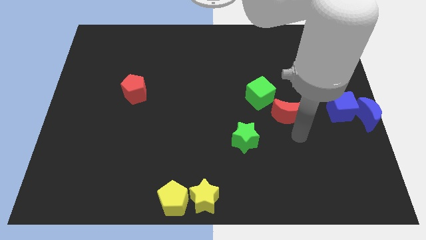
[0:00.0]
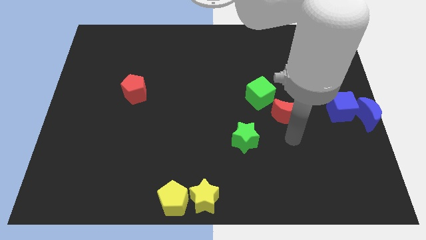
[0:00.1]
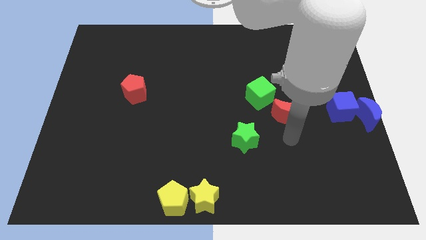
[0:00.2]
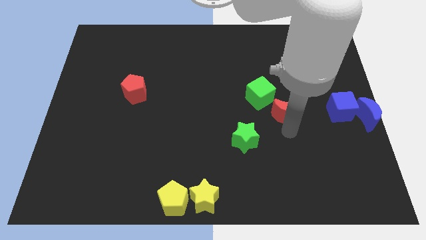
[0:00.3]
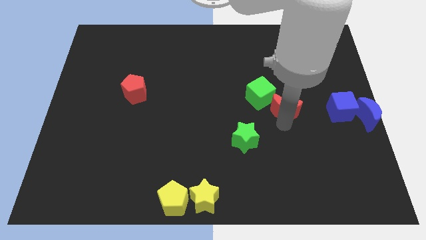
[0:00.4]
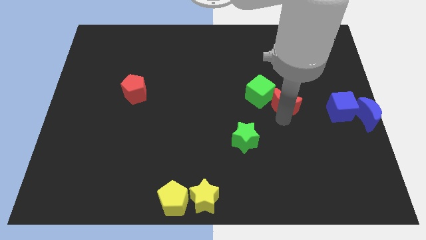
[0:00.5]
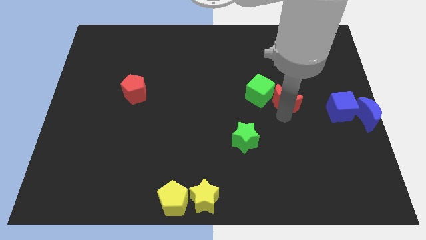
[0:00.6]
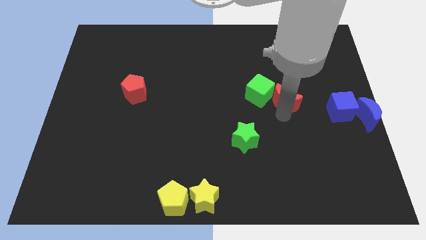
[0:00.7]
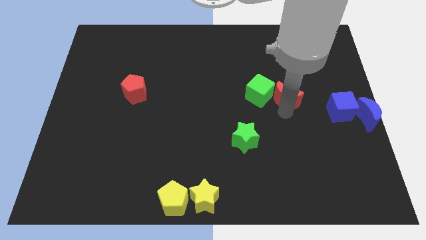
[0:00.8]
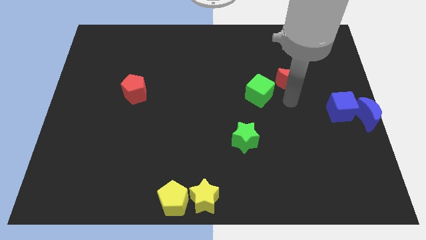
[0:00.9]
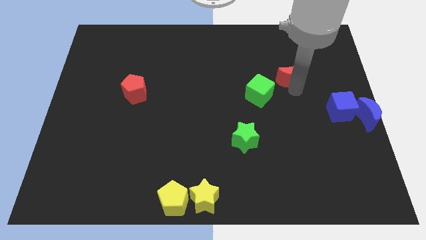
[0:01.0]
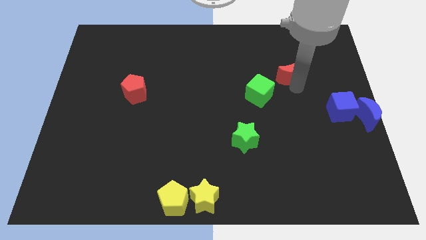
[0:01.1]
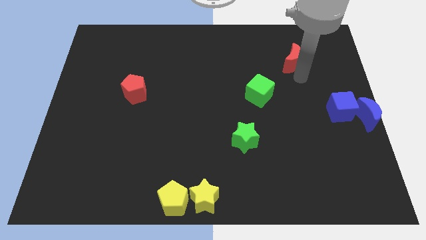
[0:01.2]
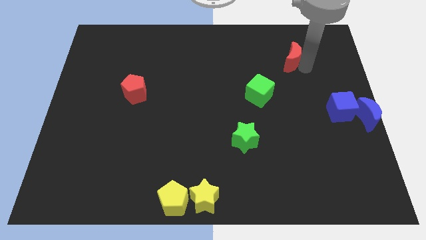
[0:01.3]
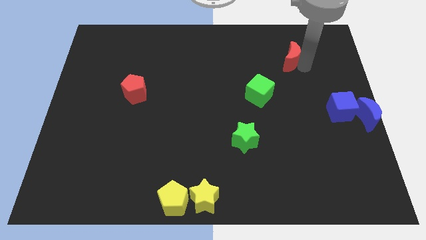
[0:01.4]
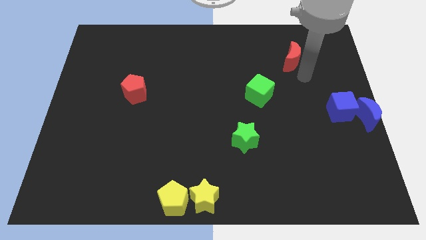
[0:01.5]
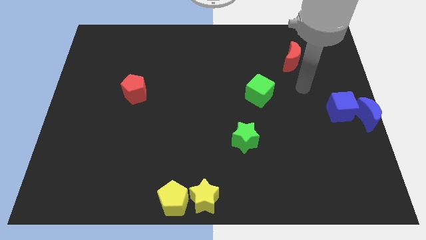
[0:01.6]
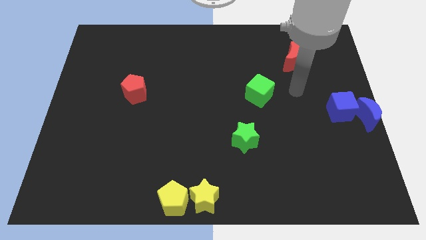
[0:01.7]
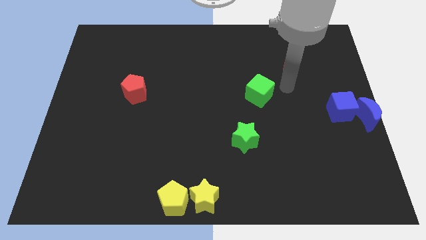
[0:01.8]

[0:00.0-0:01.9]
separate the red moon from the green cube

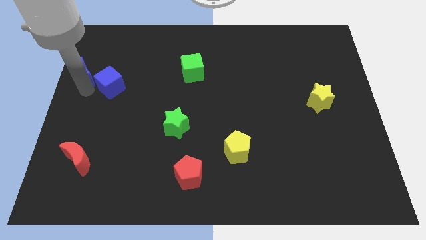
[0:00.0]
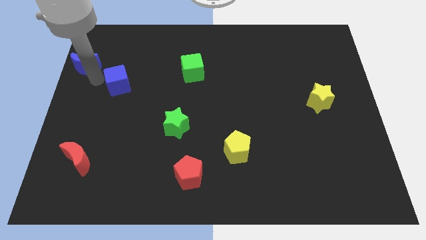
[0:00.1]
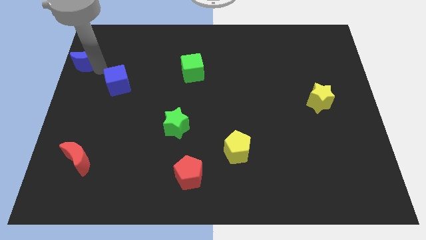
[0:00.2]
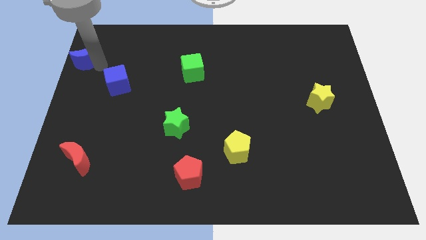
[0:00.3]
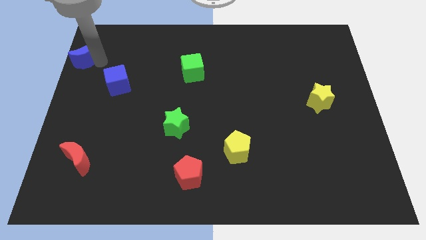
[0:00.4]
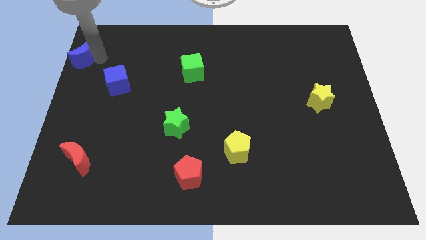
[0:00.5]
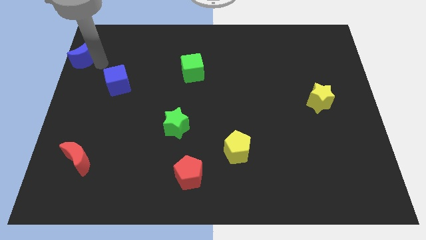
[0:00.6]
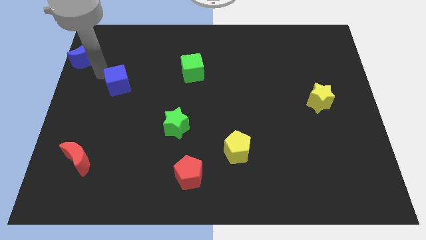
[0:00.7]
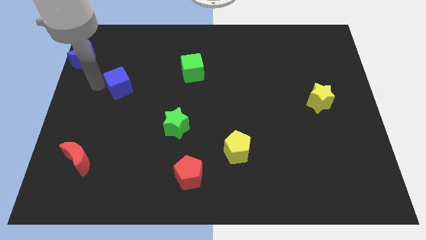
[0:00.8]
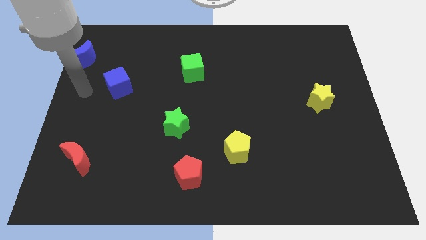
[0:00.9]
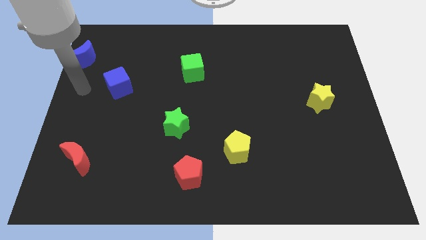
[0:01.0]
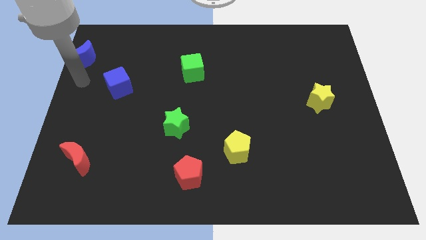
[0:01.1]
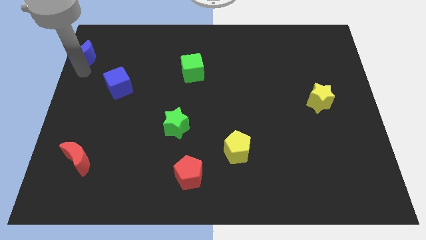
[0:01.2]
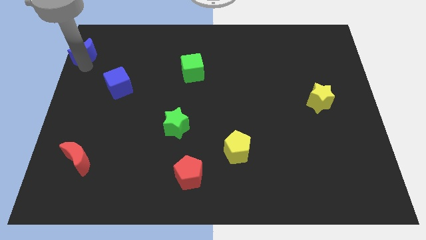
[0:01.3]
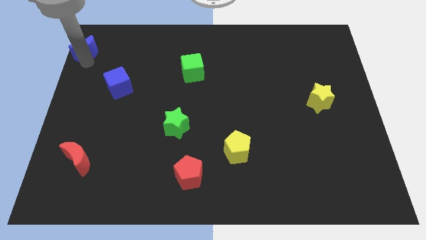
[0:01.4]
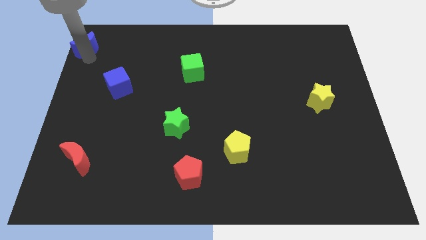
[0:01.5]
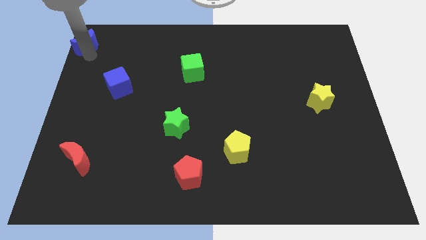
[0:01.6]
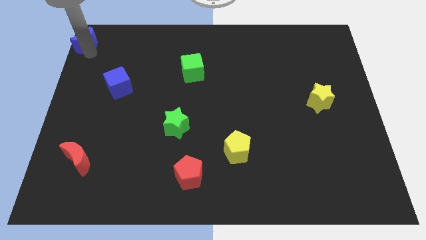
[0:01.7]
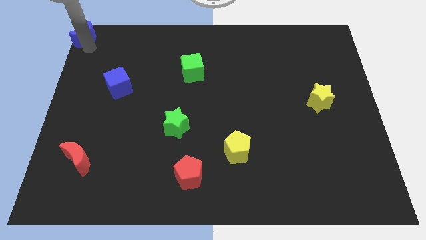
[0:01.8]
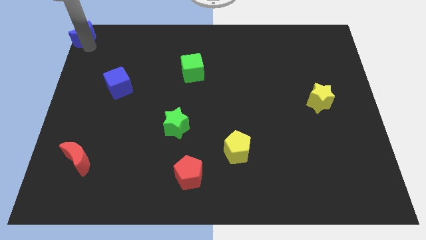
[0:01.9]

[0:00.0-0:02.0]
place blue moon to the top left corner of the board

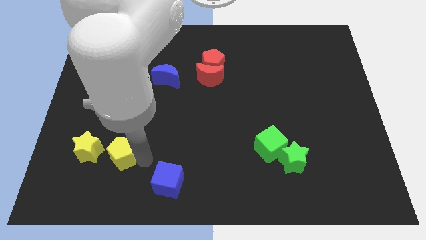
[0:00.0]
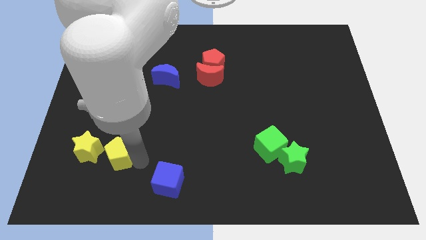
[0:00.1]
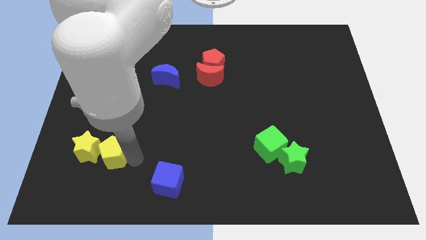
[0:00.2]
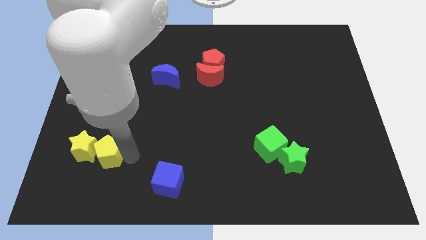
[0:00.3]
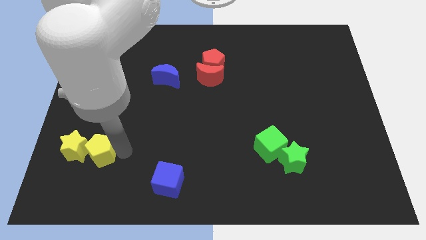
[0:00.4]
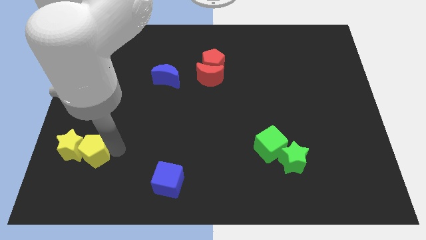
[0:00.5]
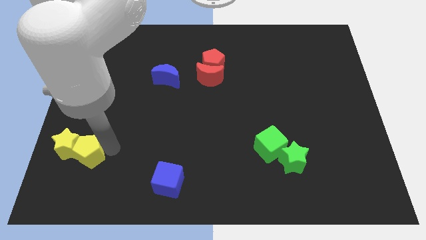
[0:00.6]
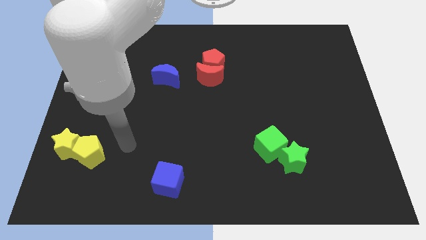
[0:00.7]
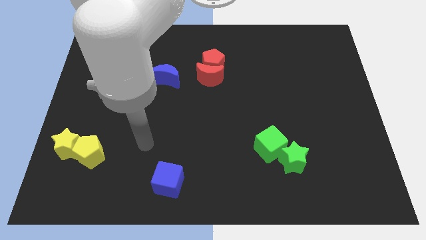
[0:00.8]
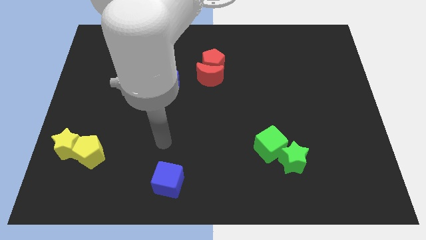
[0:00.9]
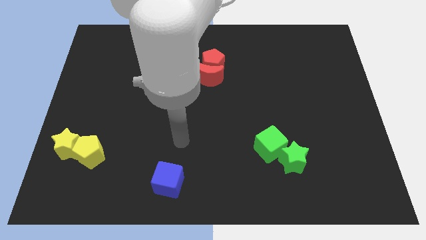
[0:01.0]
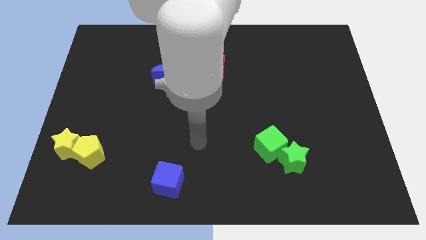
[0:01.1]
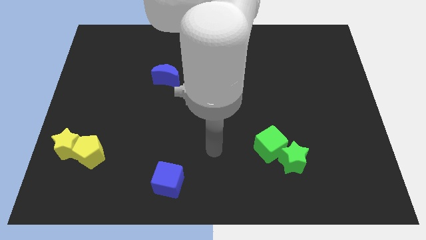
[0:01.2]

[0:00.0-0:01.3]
move the yellow pentagon and yellow star towards the left side of the board

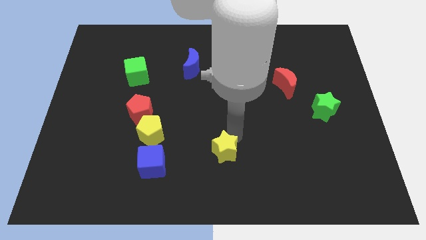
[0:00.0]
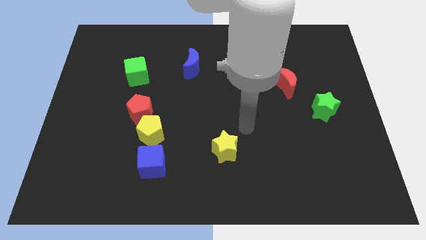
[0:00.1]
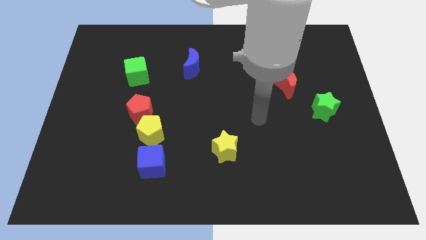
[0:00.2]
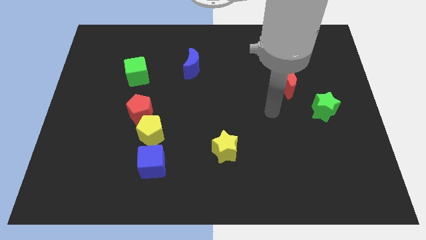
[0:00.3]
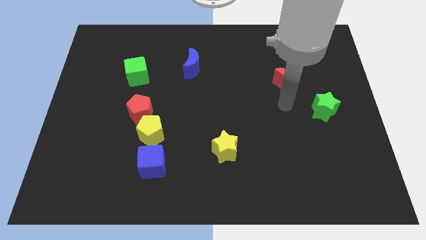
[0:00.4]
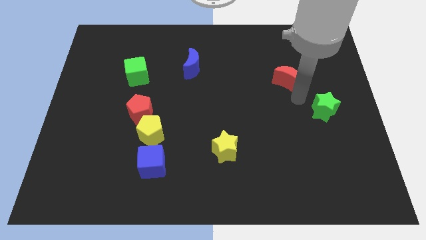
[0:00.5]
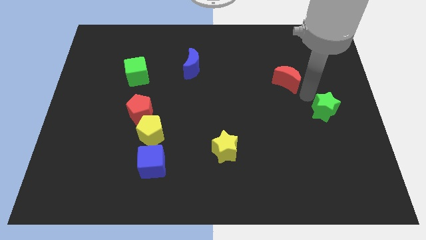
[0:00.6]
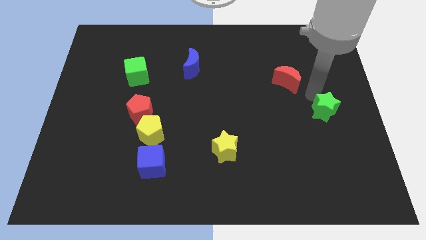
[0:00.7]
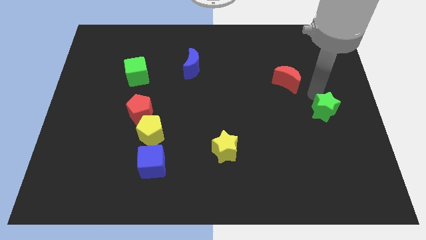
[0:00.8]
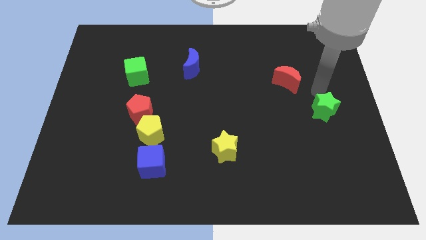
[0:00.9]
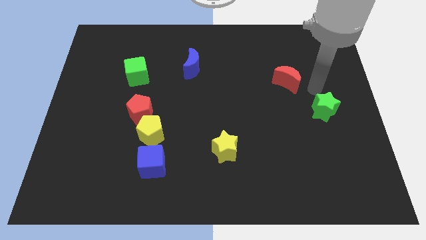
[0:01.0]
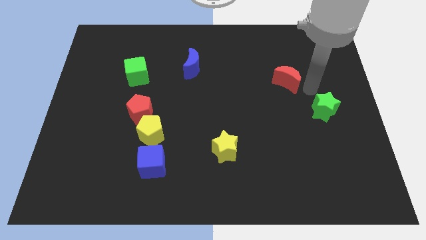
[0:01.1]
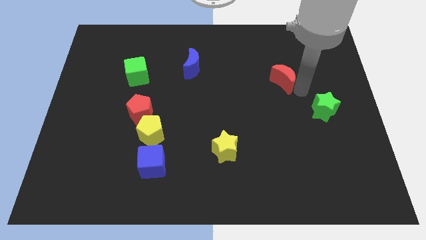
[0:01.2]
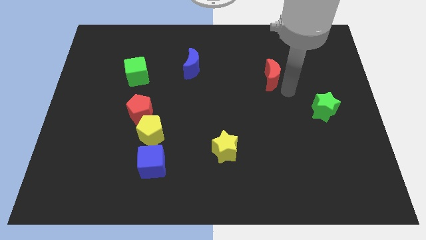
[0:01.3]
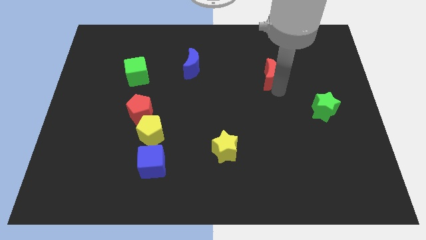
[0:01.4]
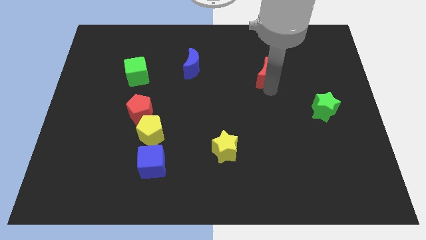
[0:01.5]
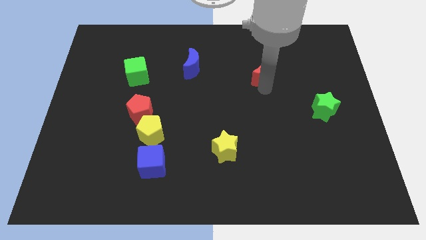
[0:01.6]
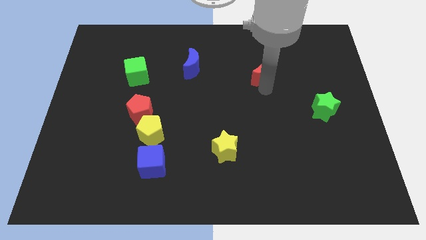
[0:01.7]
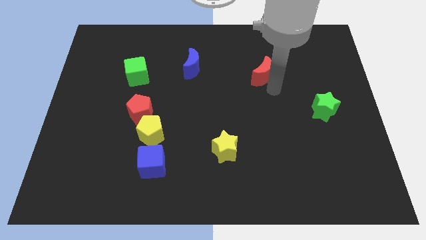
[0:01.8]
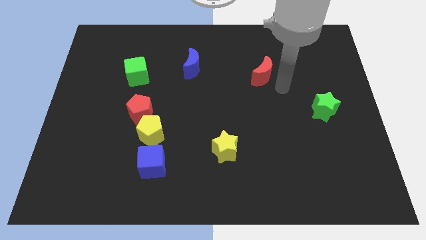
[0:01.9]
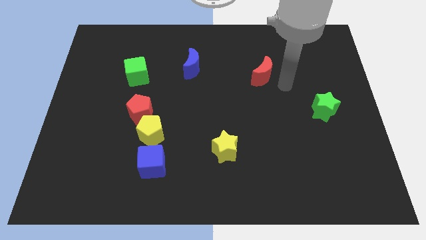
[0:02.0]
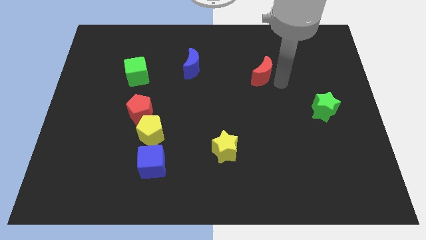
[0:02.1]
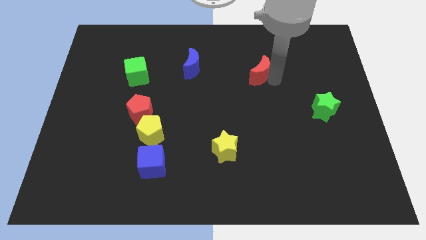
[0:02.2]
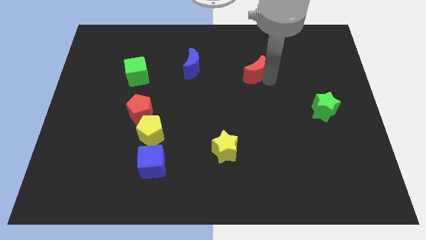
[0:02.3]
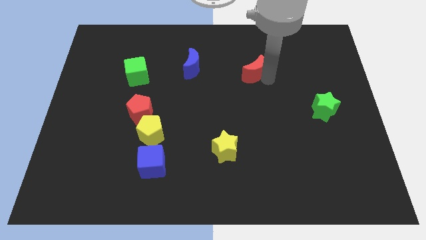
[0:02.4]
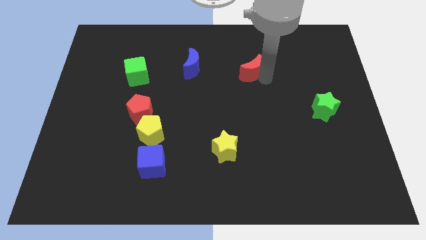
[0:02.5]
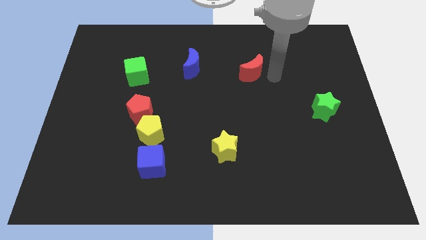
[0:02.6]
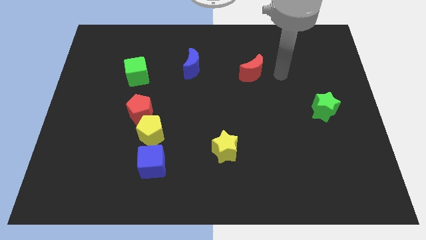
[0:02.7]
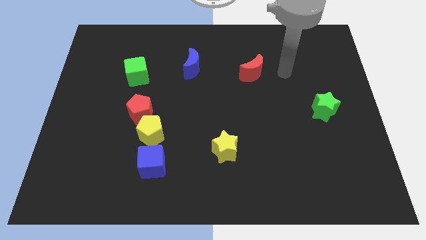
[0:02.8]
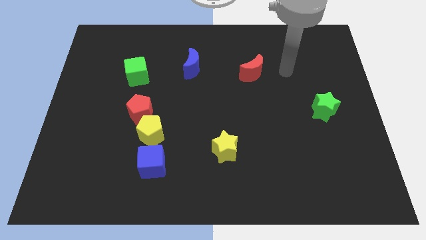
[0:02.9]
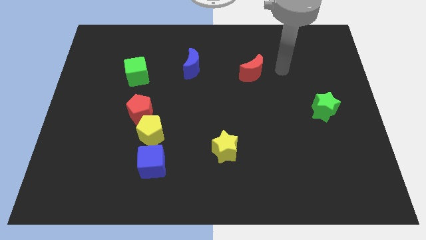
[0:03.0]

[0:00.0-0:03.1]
push the red crescent to the right of the blue crescent

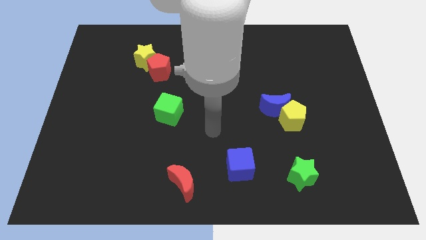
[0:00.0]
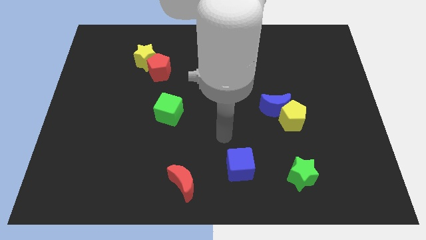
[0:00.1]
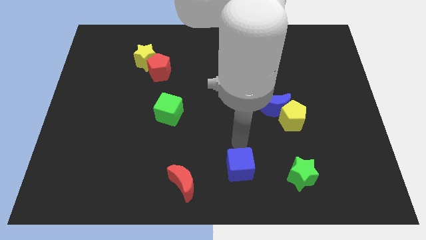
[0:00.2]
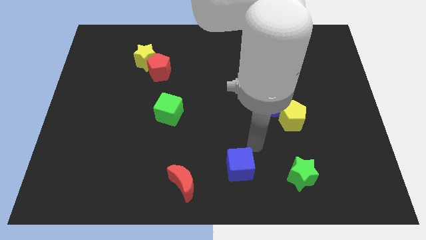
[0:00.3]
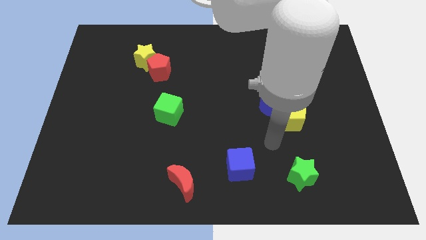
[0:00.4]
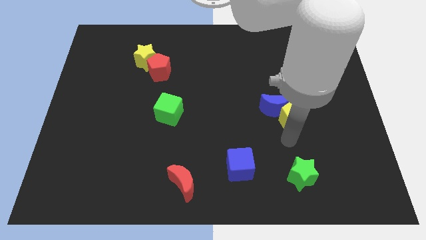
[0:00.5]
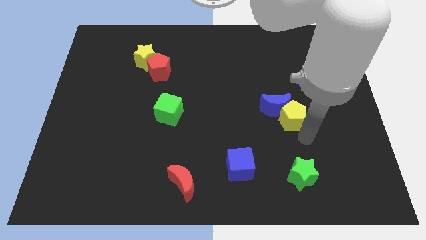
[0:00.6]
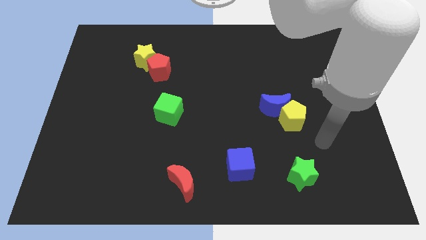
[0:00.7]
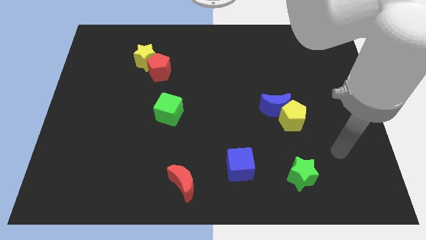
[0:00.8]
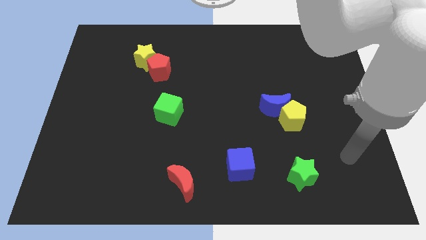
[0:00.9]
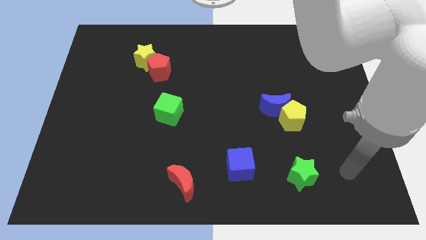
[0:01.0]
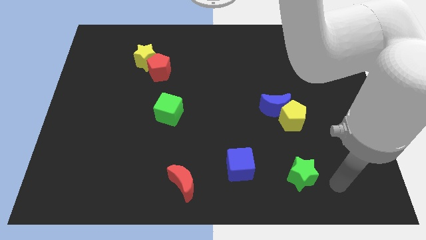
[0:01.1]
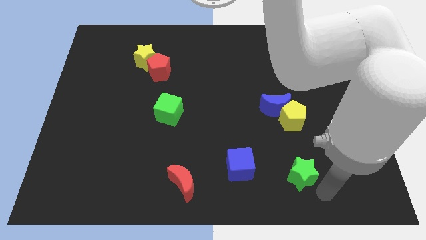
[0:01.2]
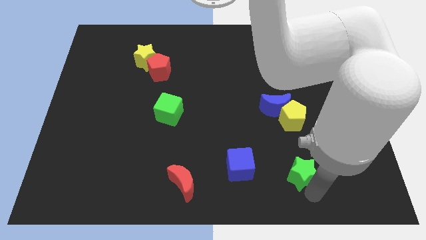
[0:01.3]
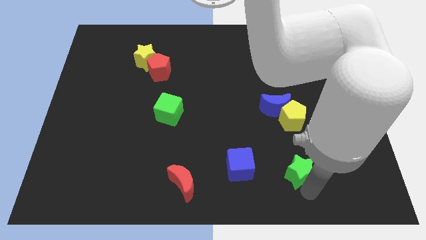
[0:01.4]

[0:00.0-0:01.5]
place your hand below the green star
